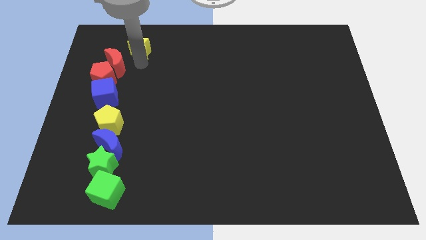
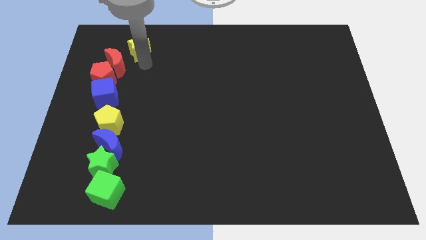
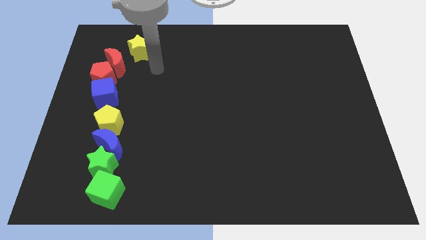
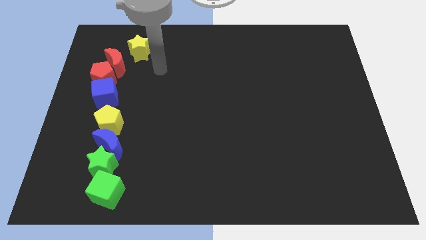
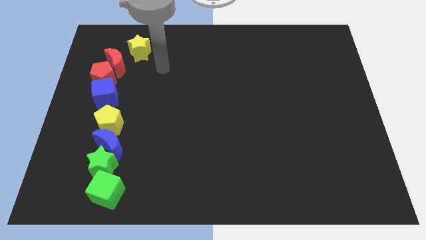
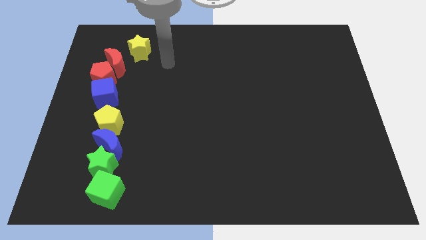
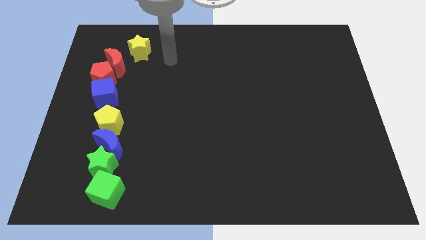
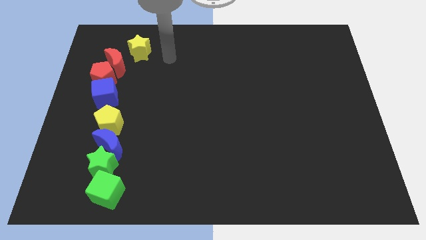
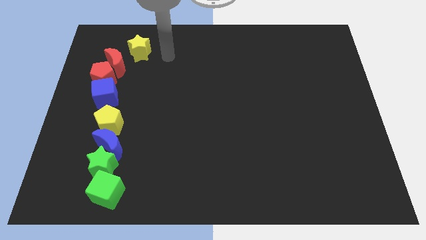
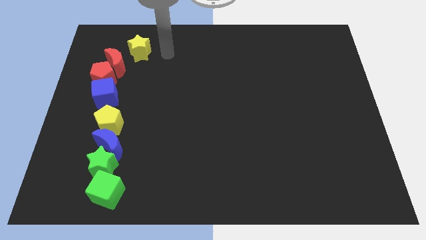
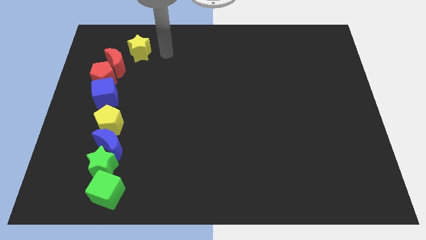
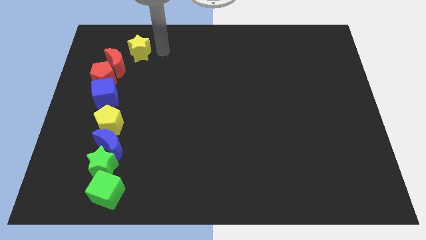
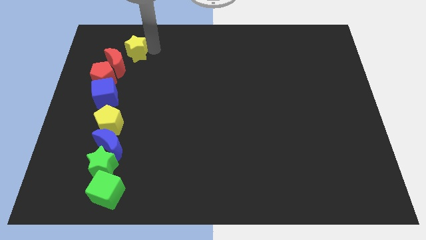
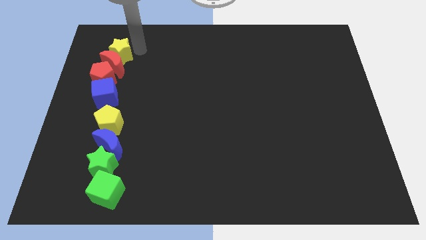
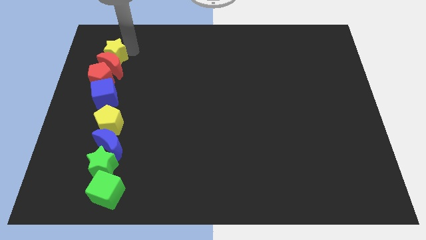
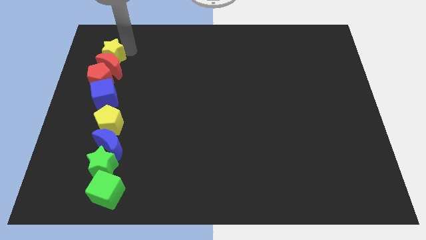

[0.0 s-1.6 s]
push the yellow star towards the top of the red crescent

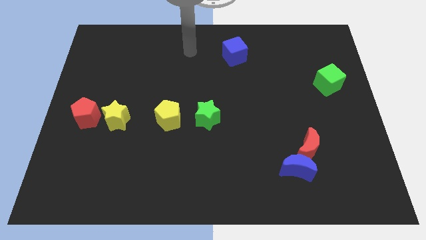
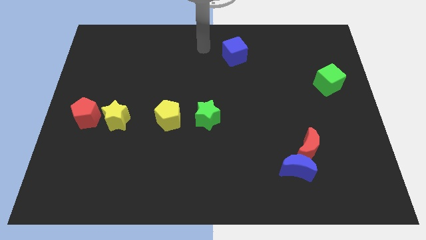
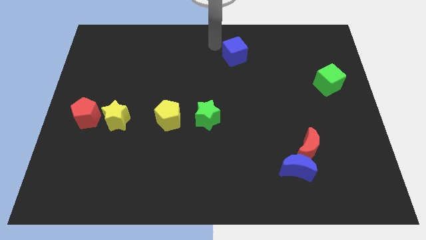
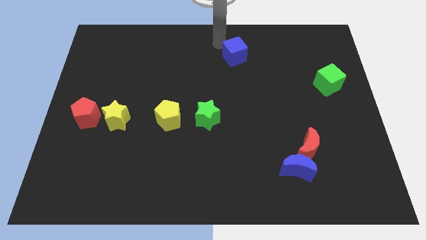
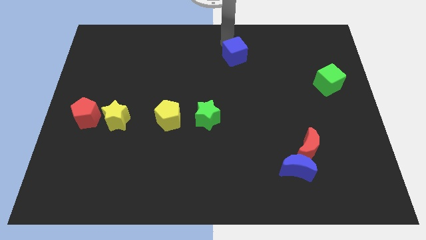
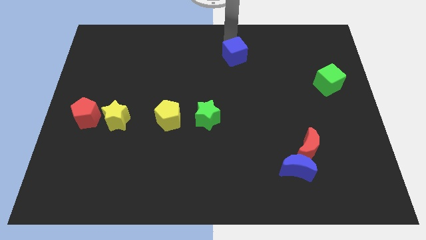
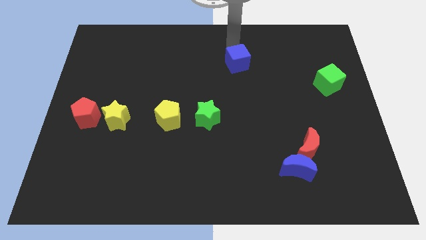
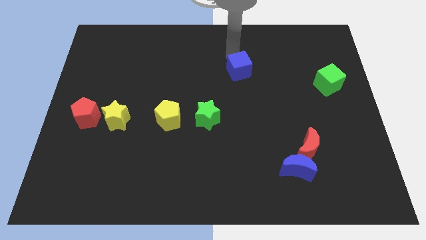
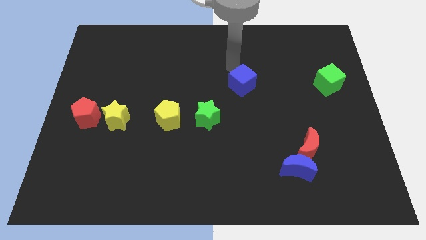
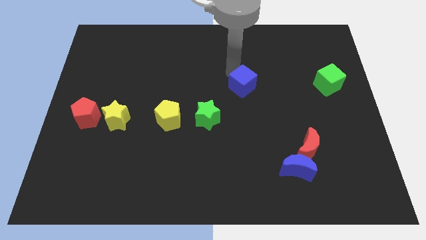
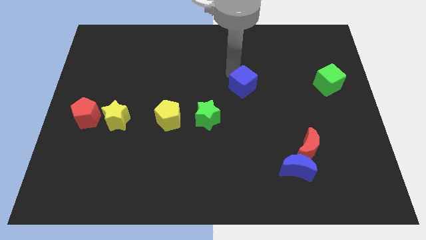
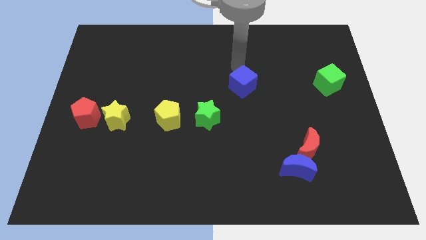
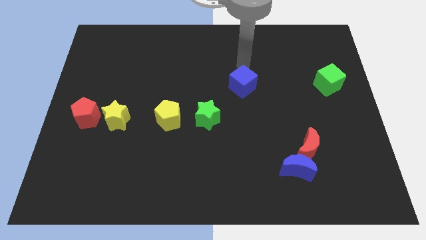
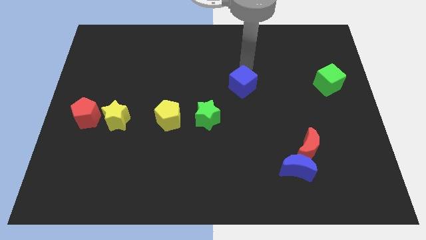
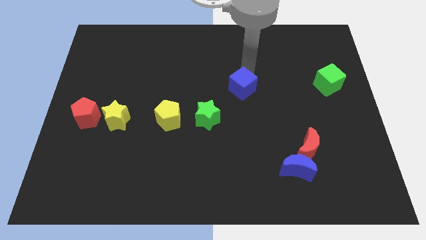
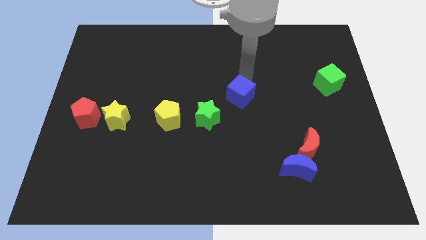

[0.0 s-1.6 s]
drag the blue cube parallel left to the green cube

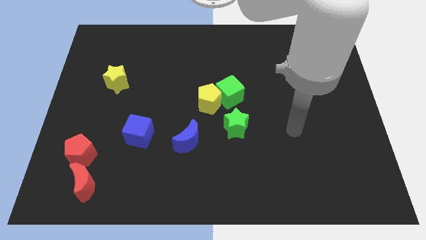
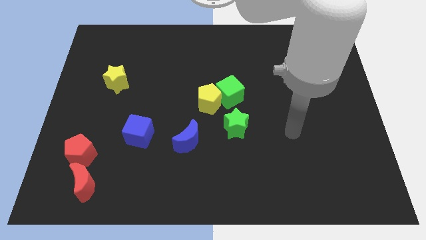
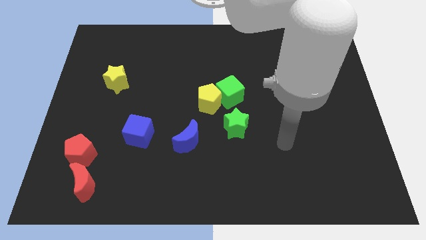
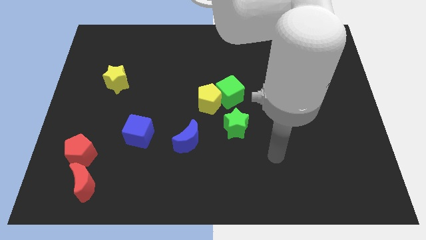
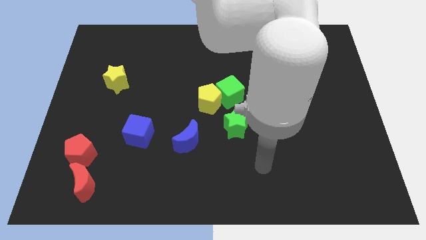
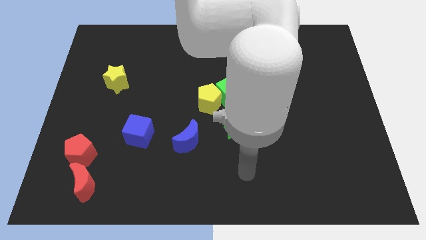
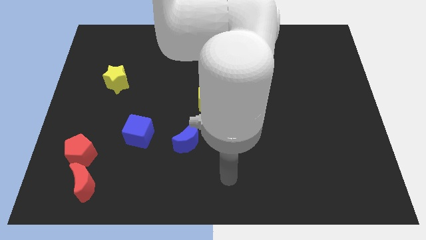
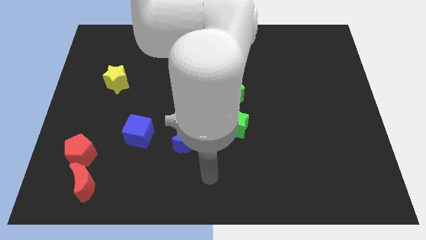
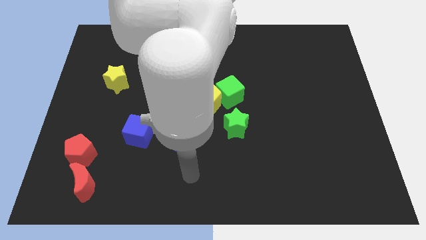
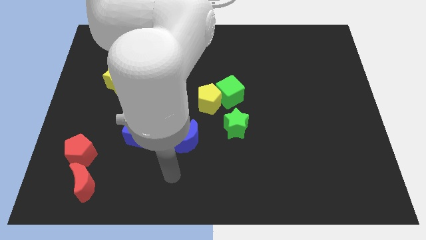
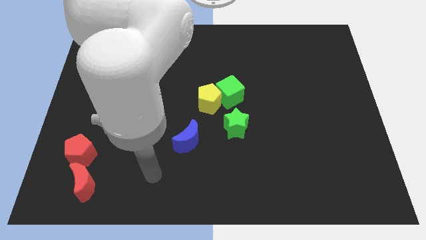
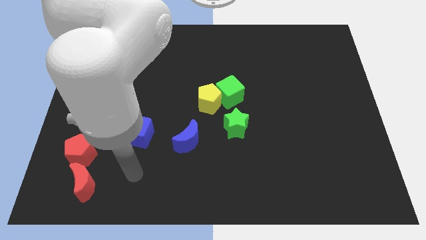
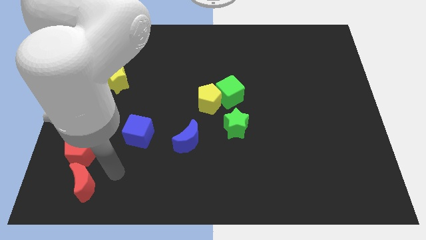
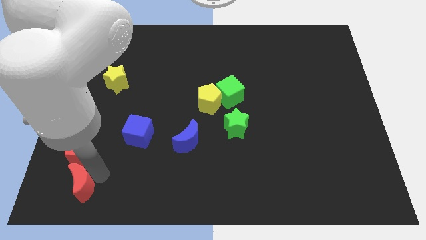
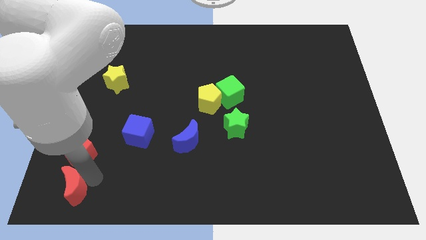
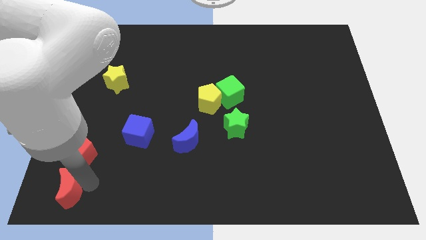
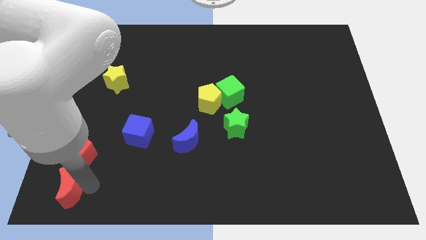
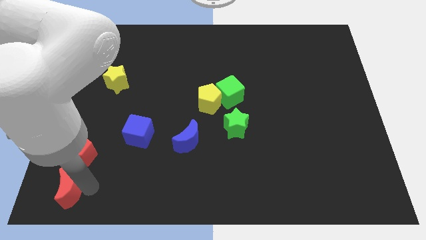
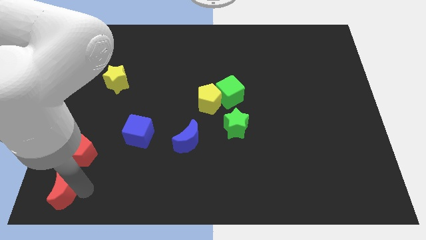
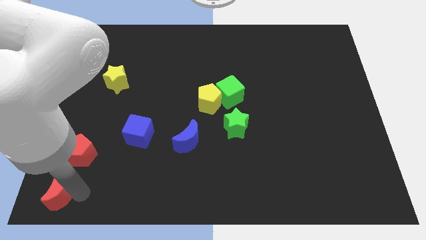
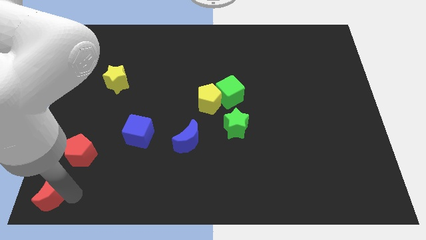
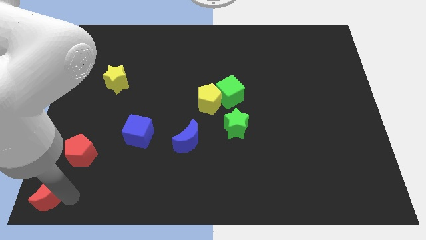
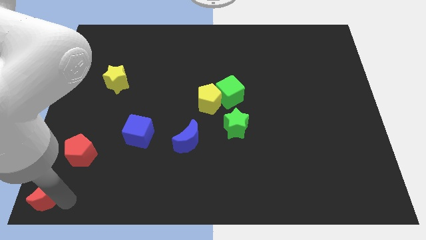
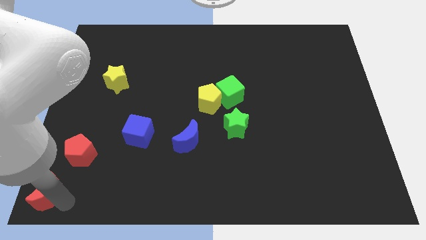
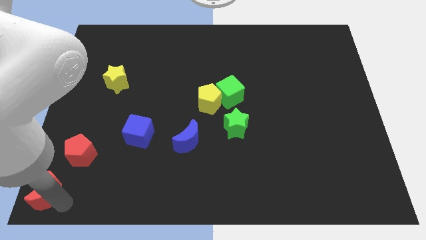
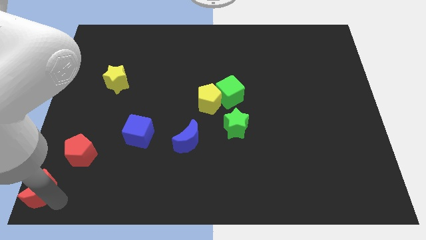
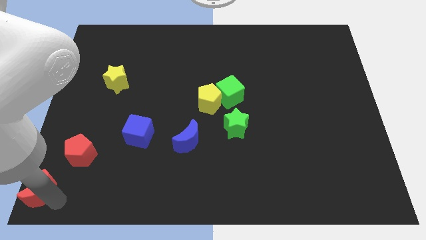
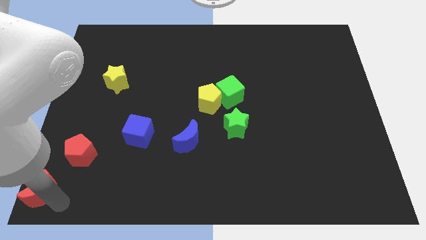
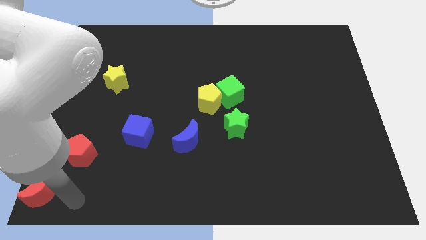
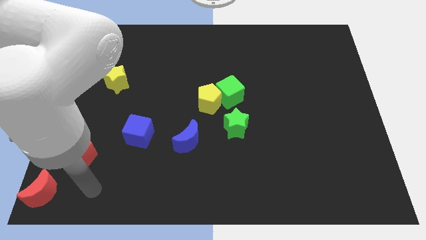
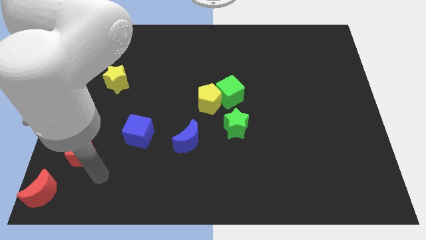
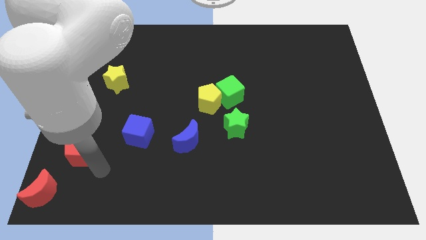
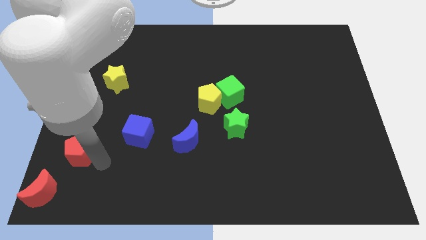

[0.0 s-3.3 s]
move the red crescent towards the bottom left corner of the board

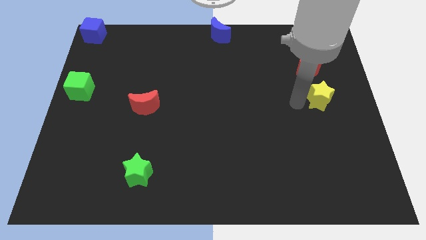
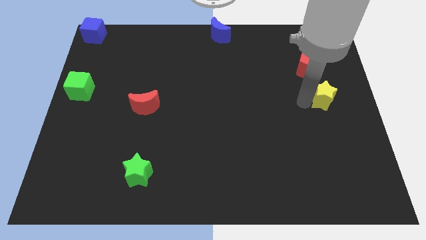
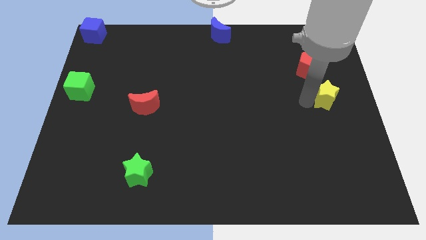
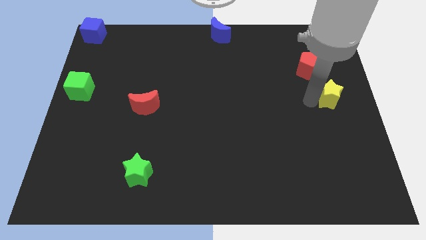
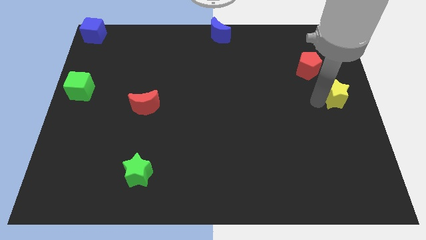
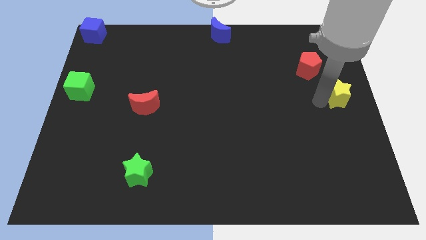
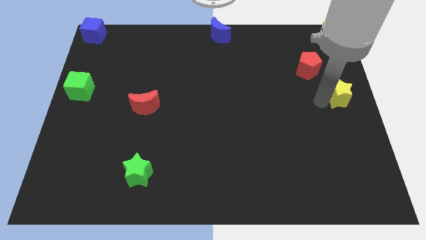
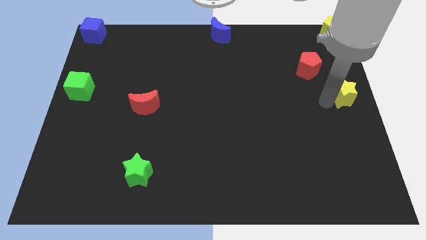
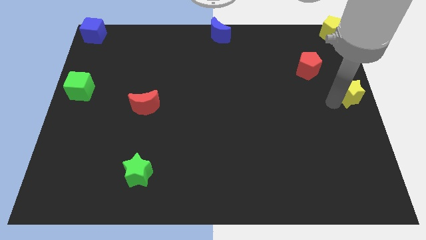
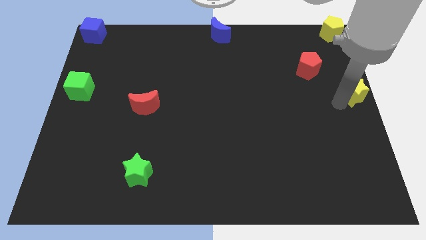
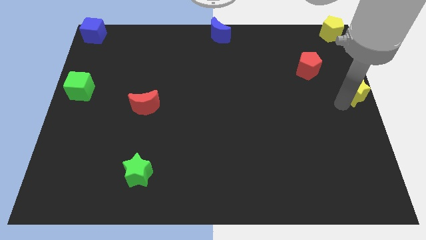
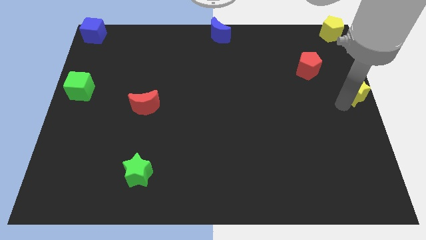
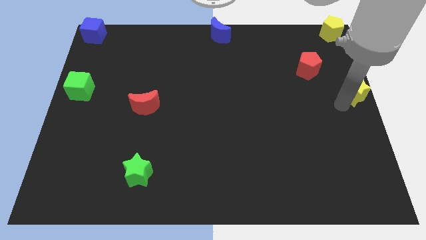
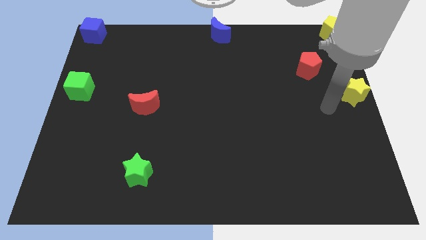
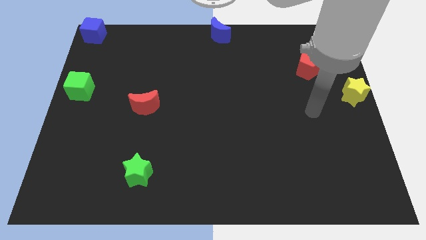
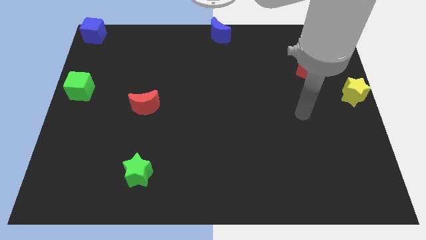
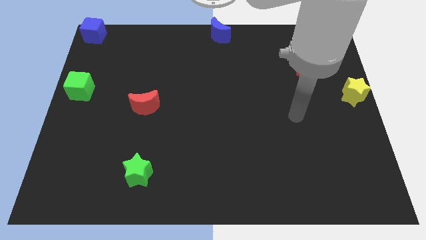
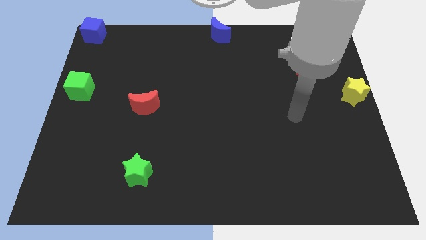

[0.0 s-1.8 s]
push the yellow star to the center right side of the board

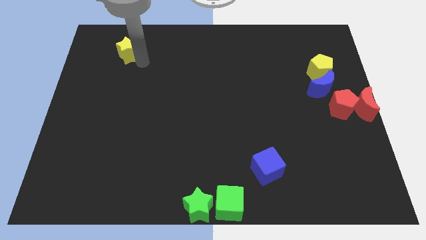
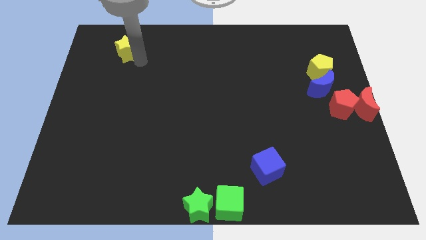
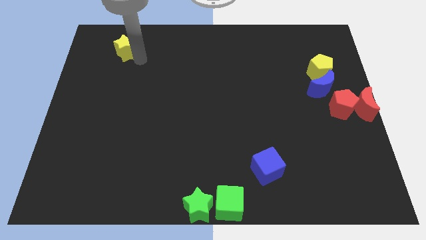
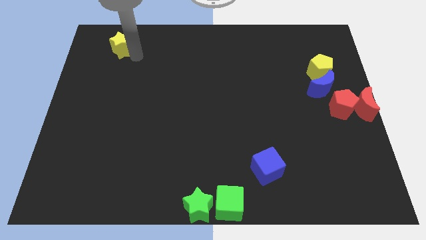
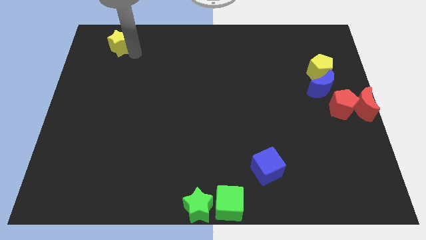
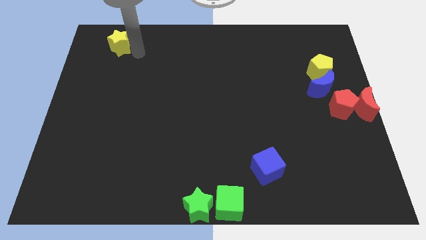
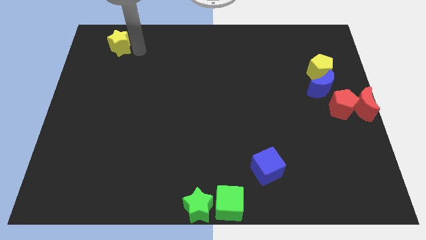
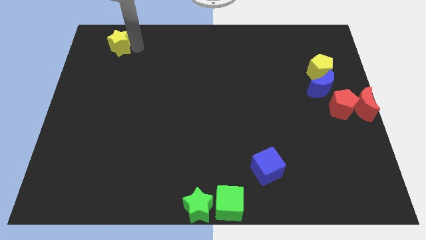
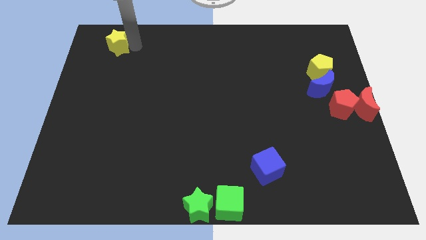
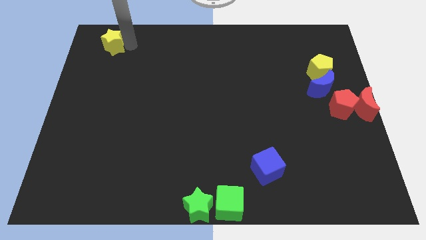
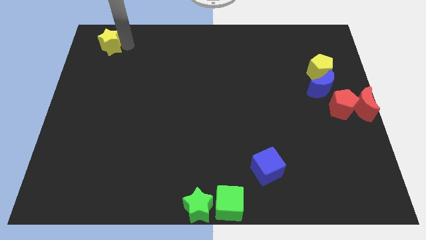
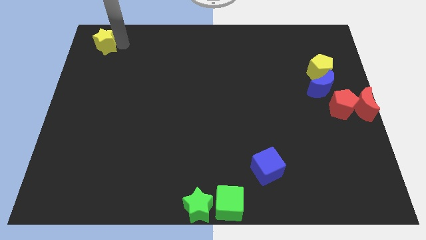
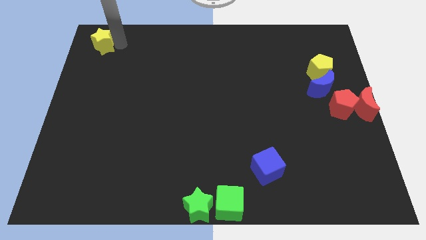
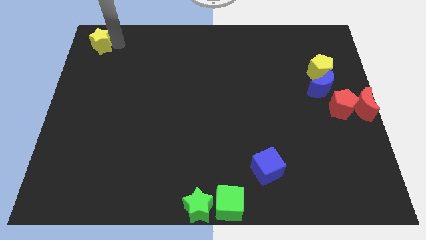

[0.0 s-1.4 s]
move the yellow star to the top left corner
